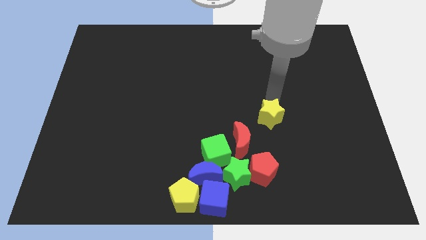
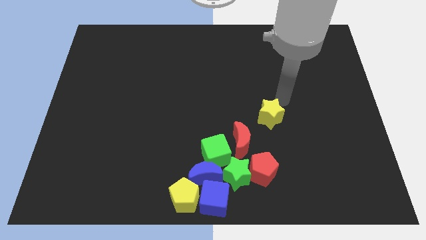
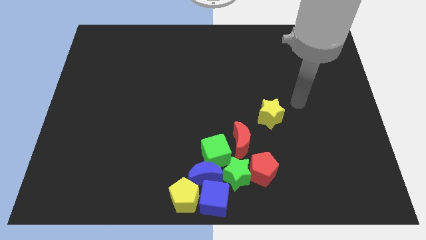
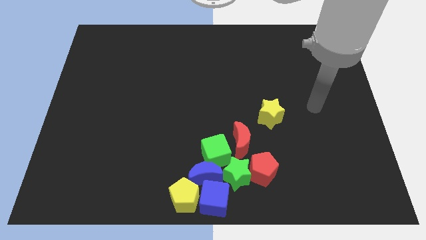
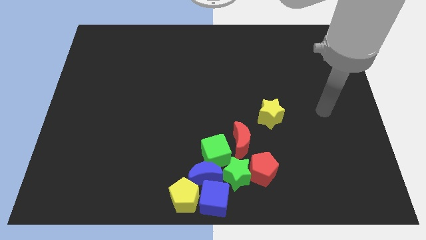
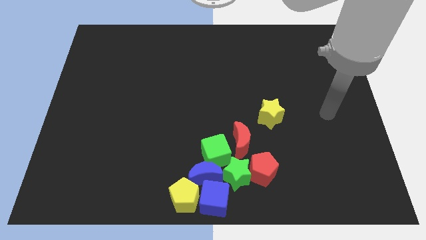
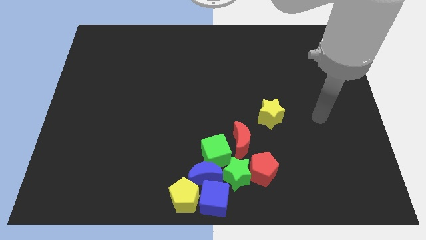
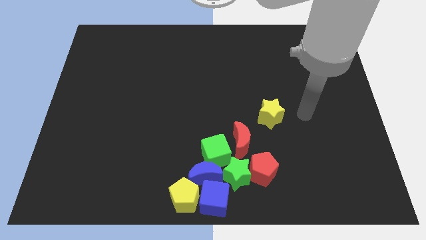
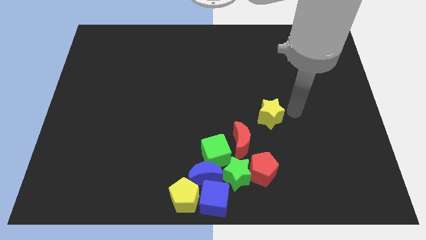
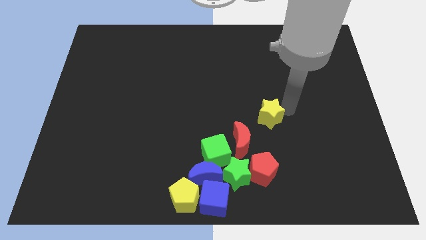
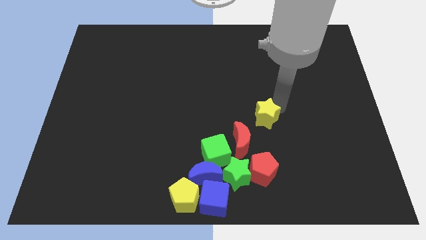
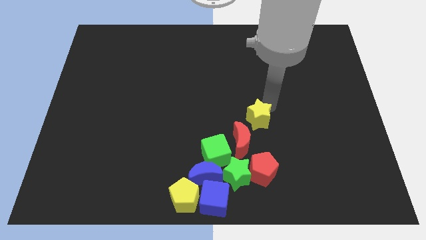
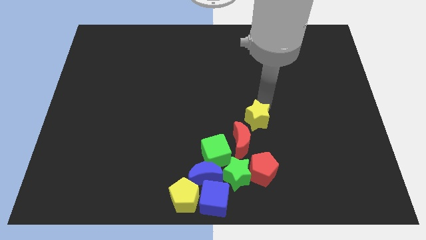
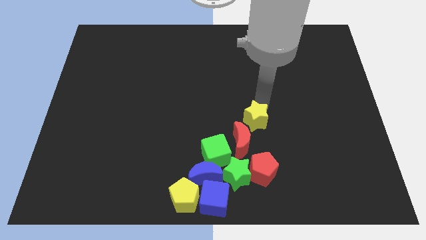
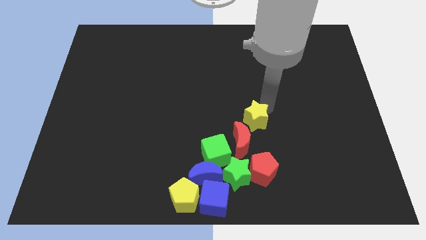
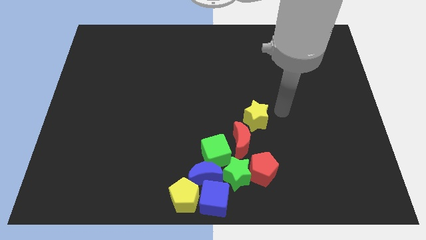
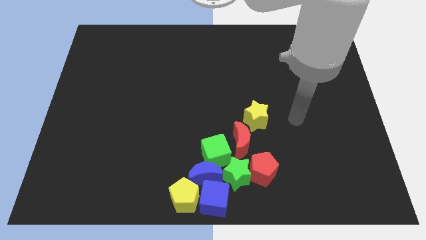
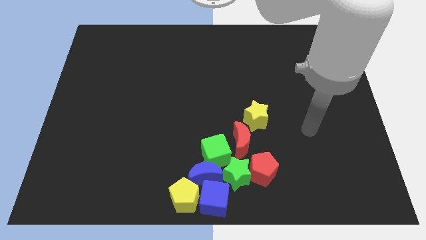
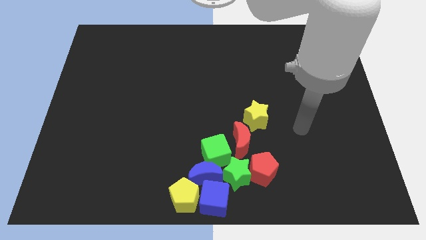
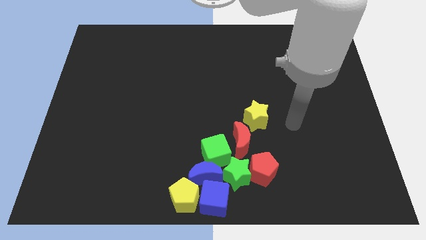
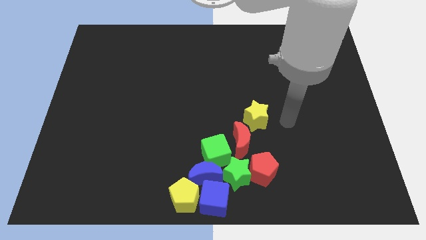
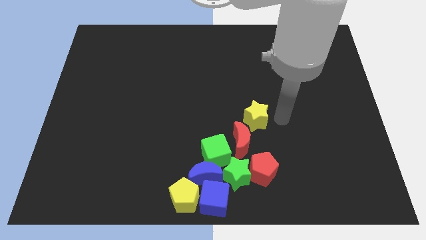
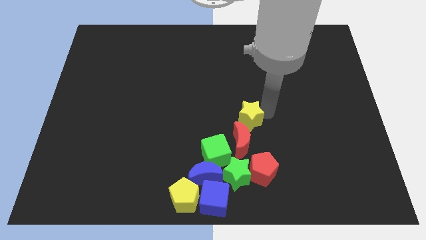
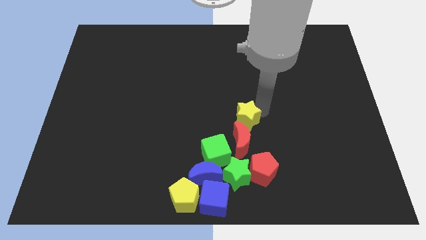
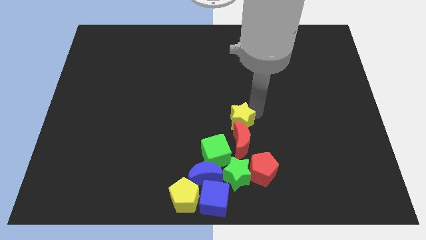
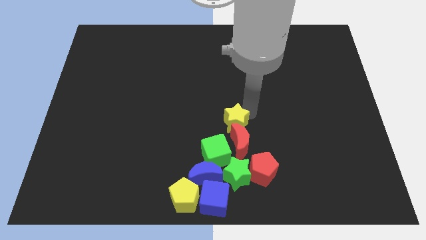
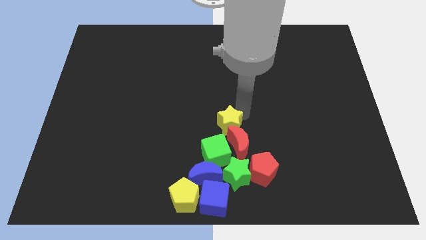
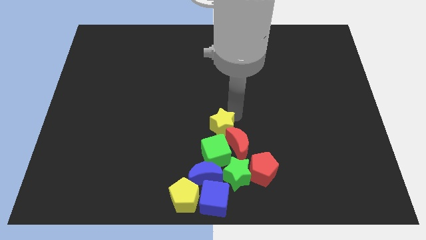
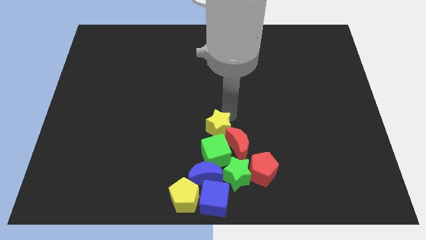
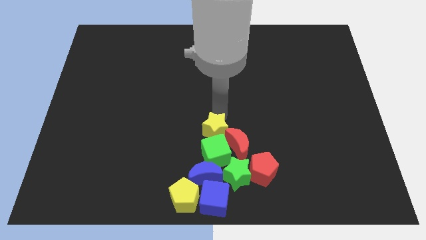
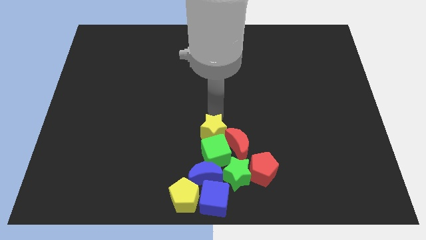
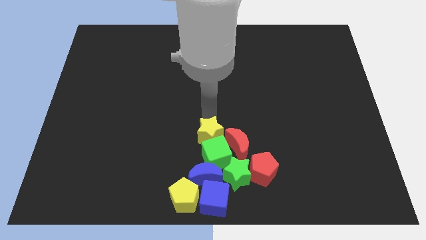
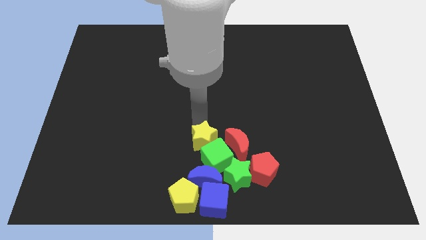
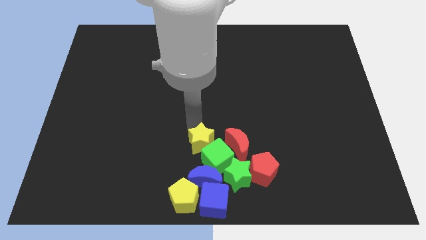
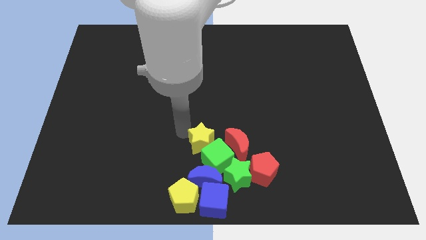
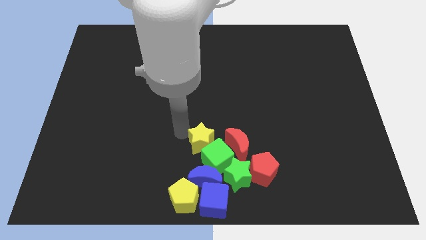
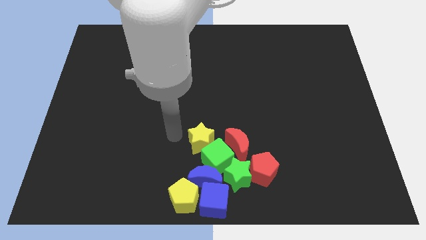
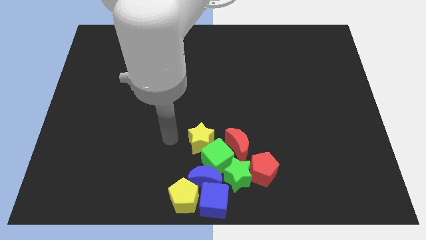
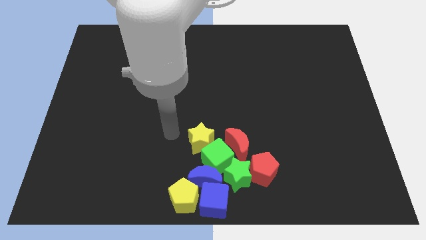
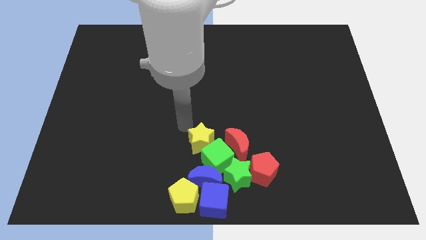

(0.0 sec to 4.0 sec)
push the yellow star closer to the green cube

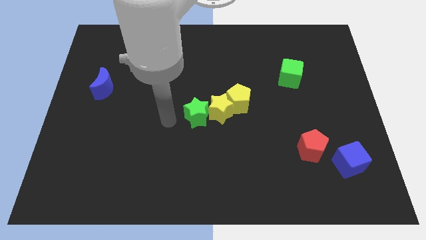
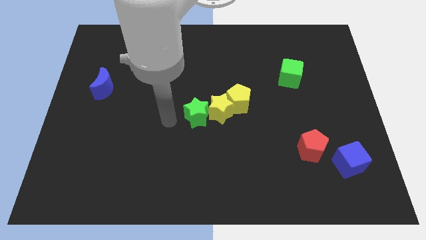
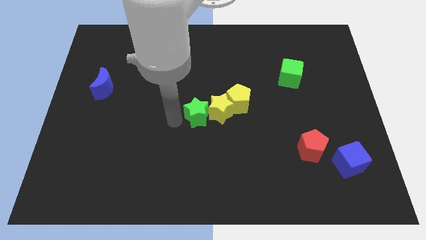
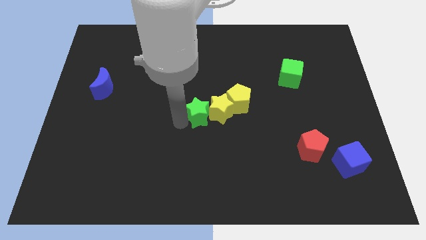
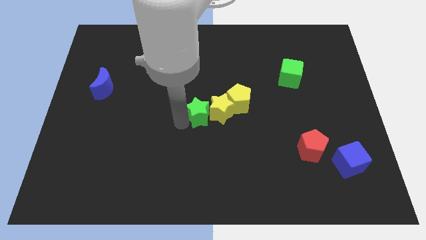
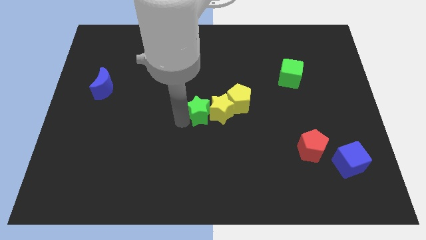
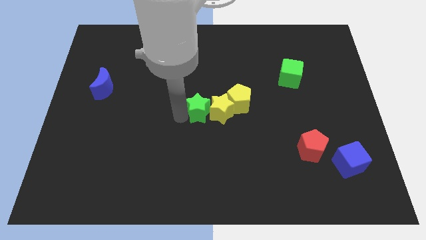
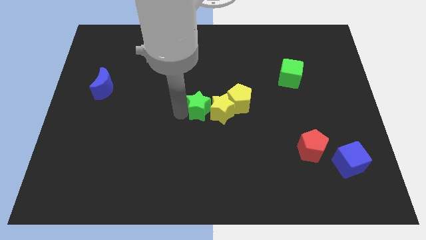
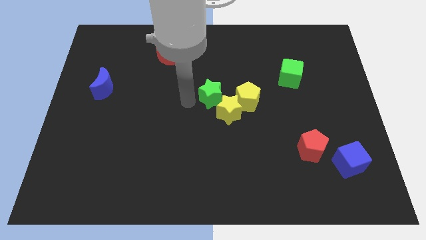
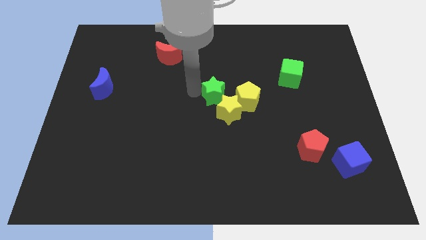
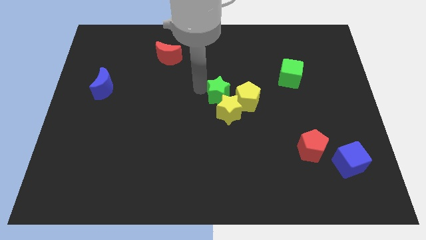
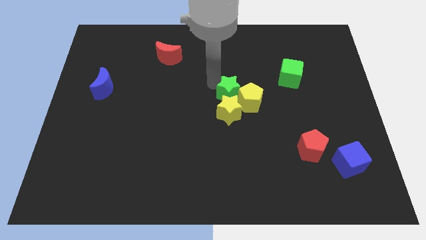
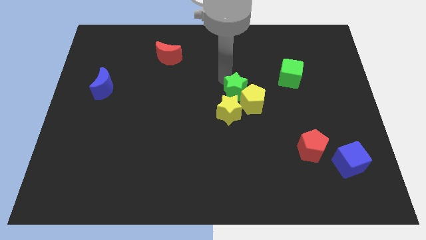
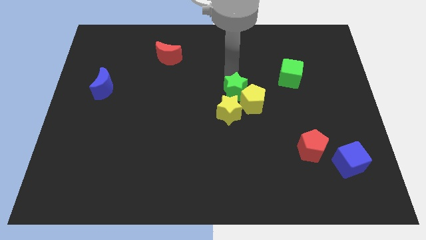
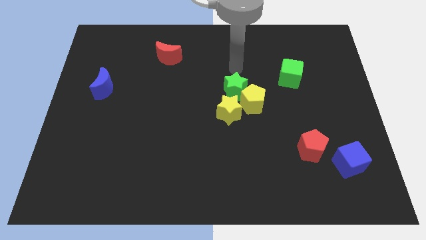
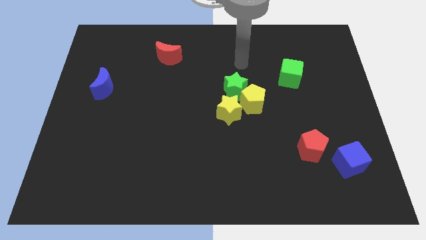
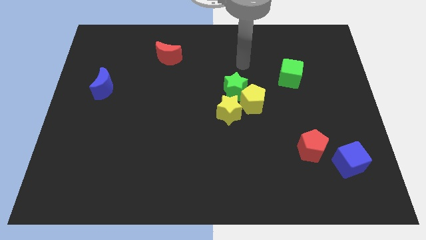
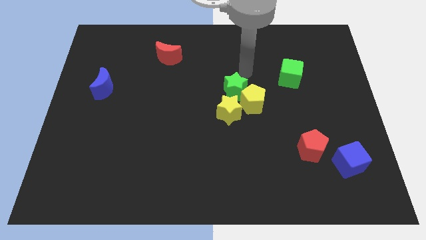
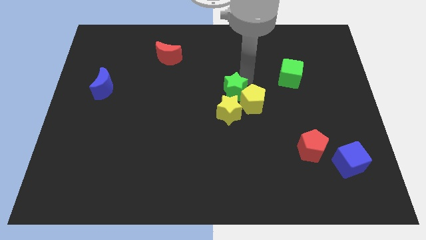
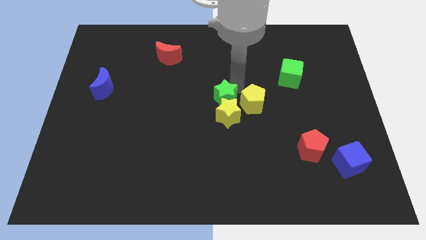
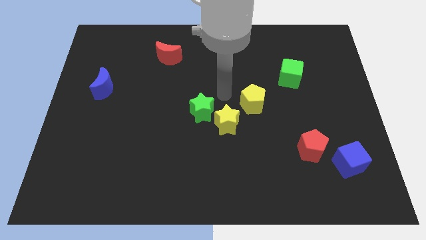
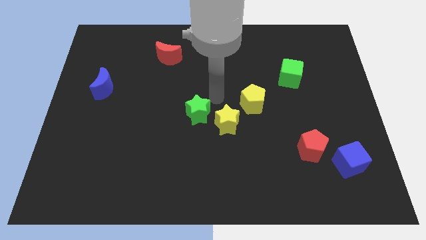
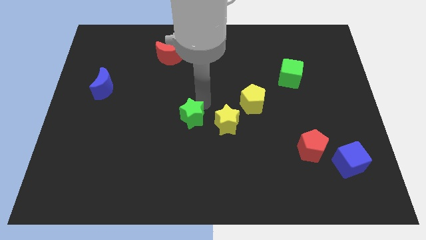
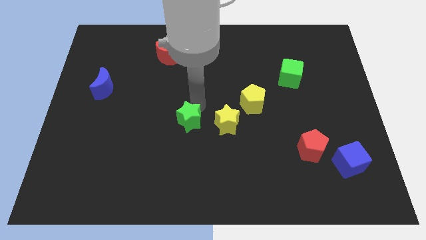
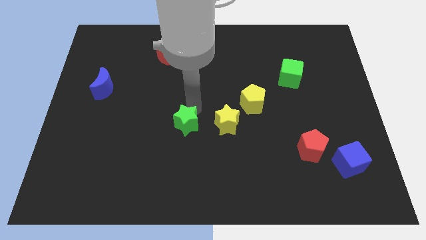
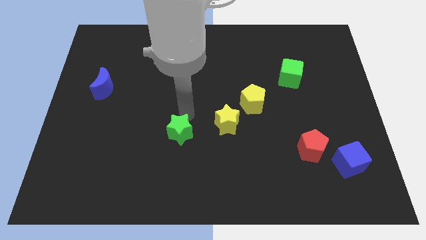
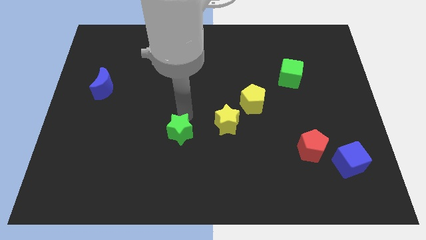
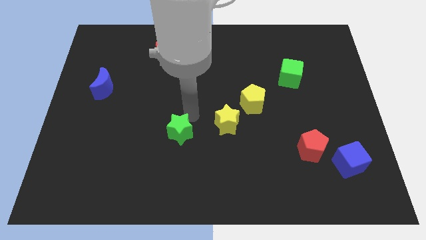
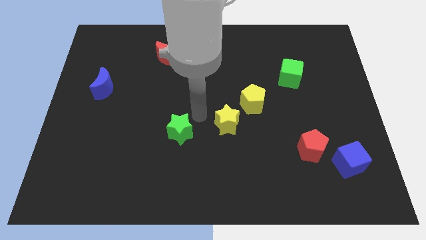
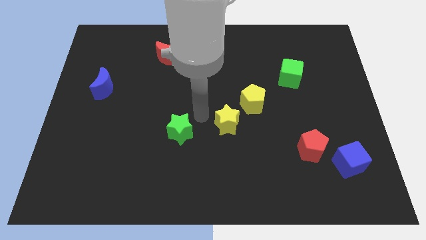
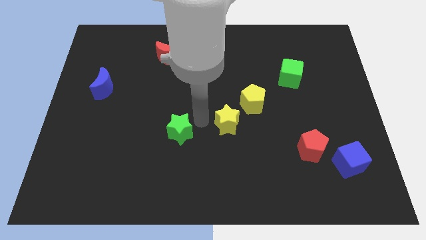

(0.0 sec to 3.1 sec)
push the green star to the left side of the yellow star

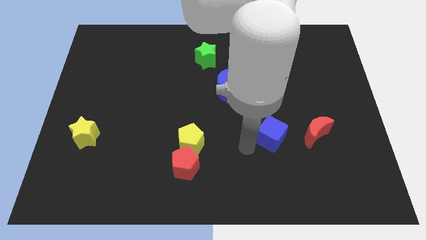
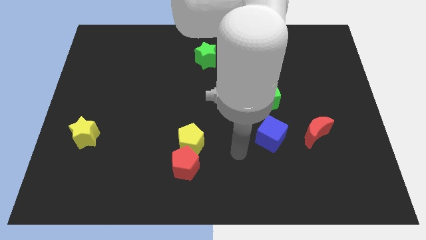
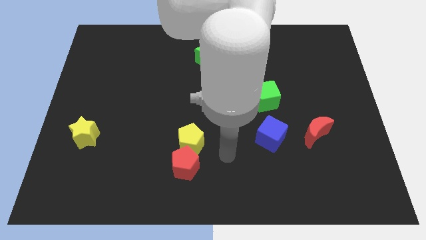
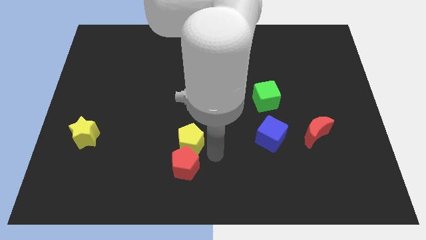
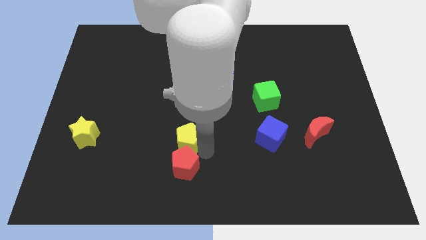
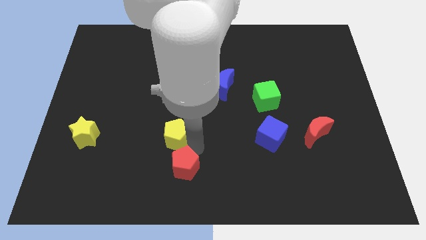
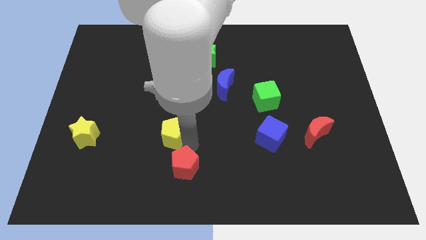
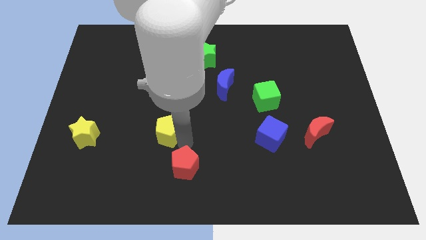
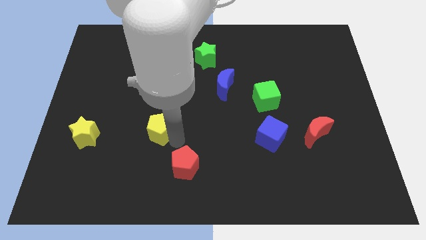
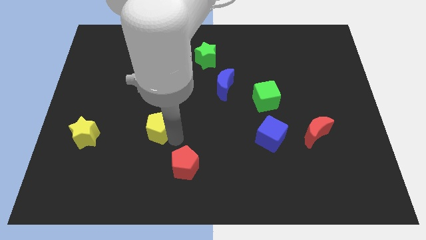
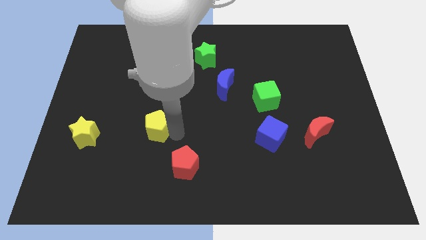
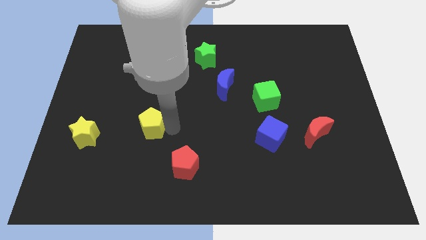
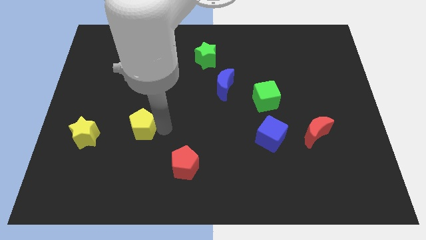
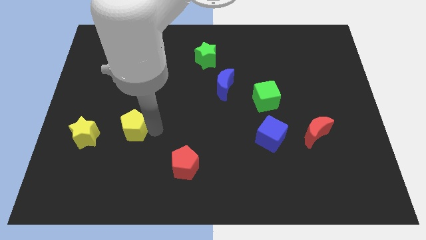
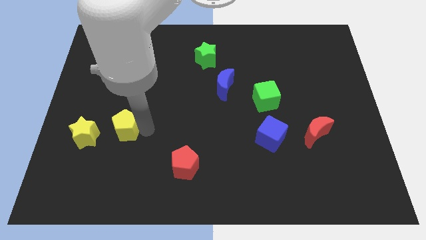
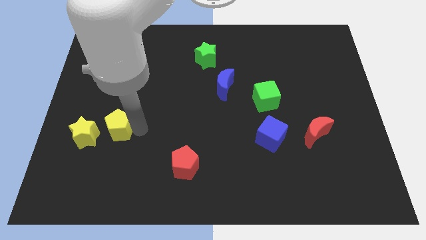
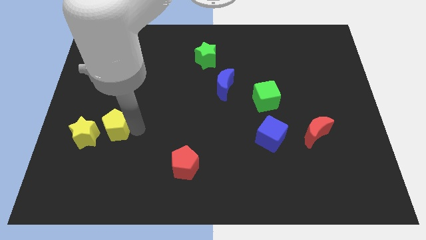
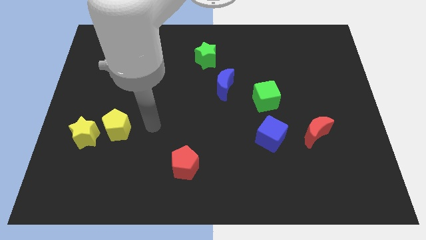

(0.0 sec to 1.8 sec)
push the yellow pentagon to the right of the yellow star
